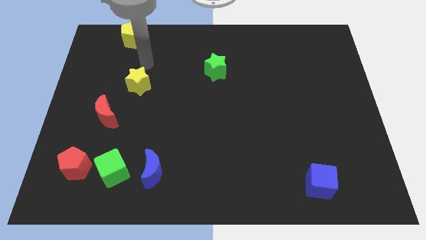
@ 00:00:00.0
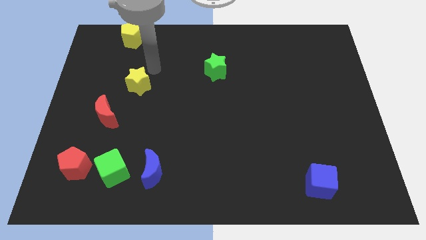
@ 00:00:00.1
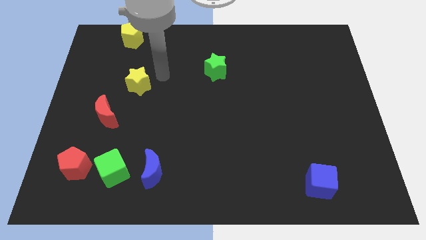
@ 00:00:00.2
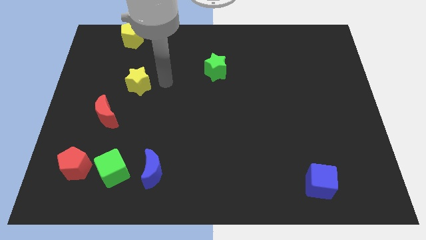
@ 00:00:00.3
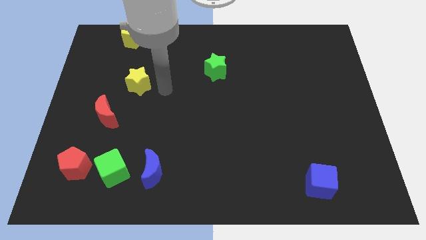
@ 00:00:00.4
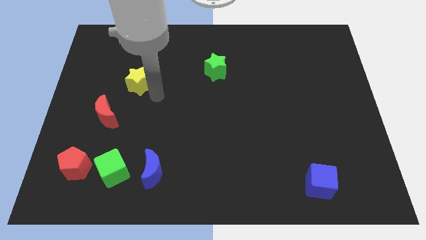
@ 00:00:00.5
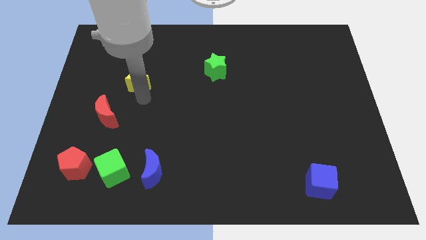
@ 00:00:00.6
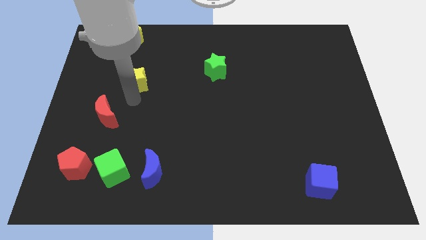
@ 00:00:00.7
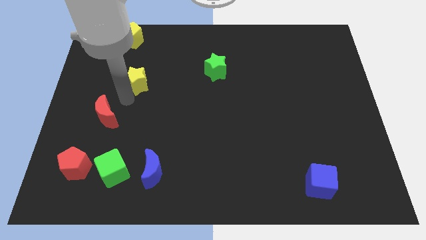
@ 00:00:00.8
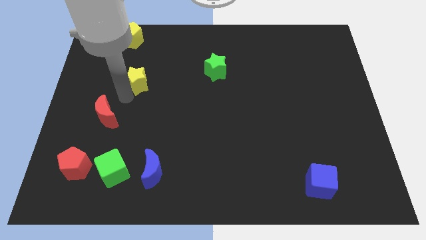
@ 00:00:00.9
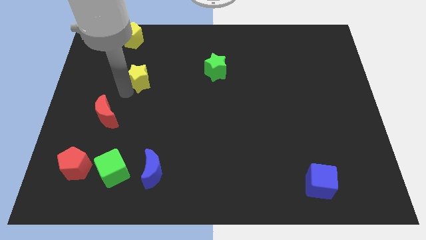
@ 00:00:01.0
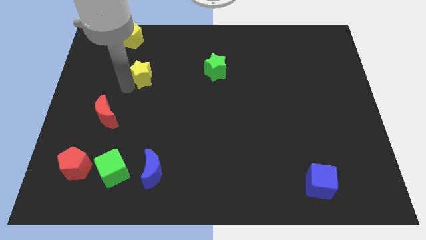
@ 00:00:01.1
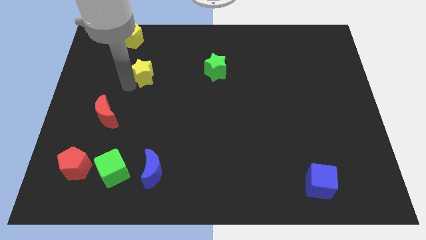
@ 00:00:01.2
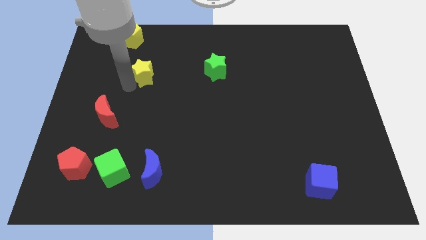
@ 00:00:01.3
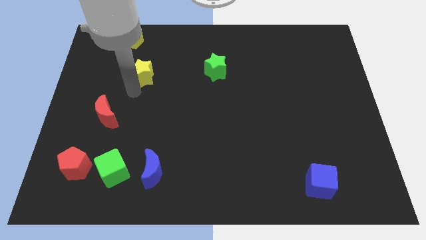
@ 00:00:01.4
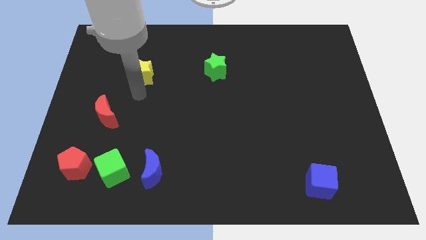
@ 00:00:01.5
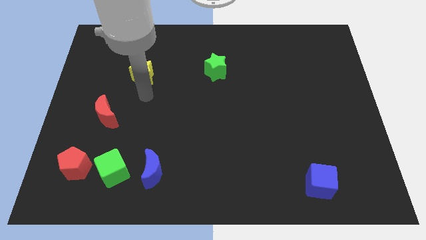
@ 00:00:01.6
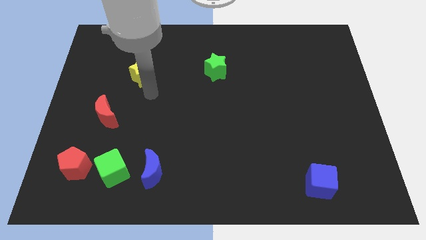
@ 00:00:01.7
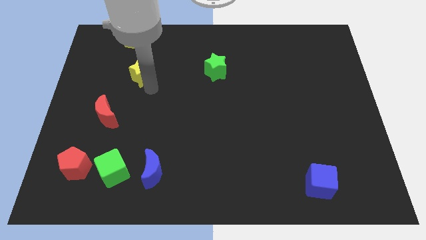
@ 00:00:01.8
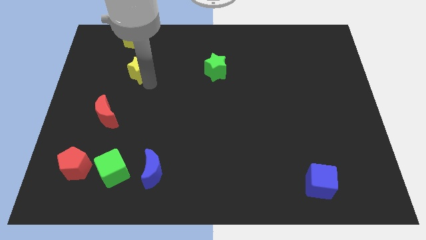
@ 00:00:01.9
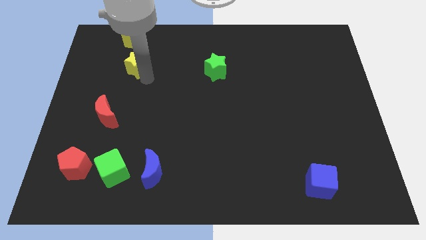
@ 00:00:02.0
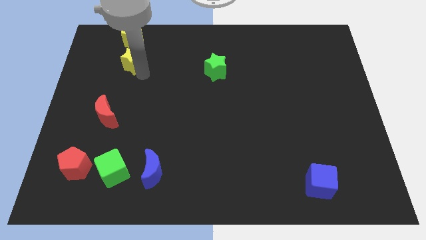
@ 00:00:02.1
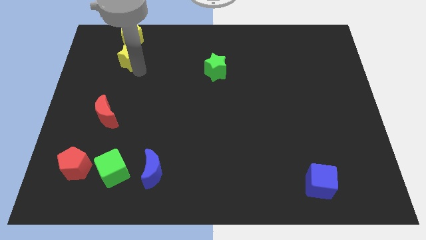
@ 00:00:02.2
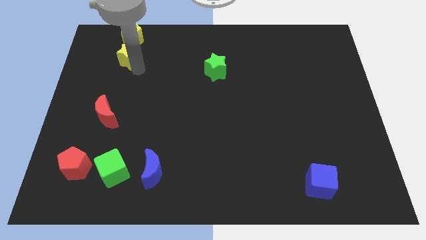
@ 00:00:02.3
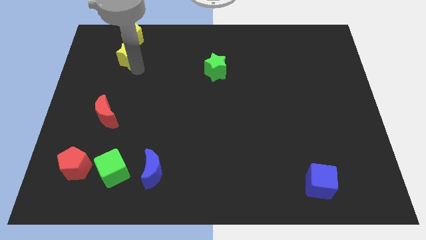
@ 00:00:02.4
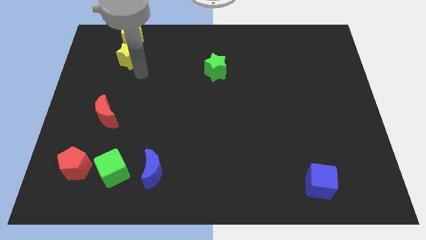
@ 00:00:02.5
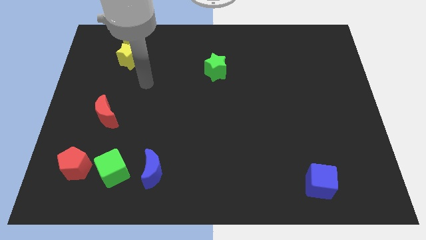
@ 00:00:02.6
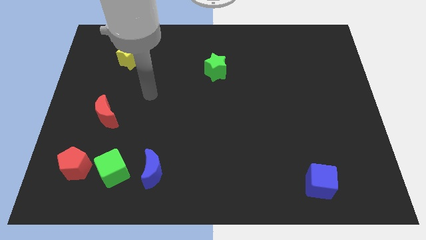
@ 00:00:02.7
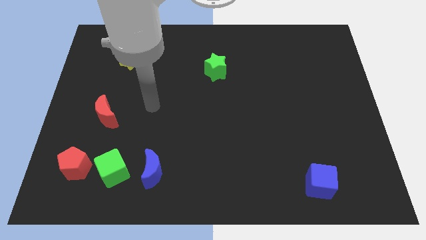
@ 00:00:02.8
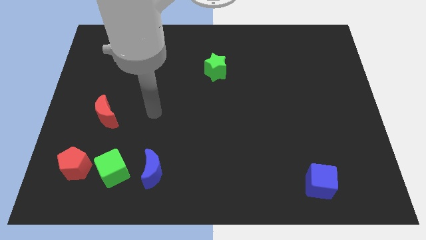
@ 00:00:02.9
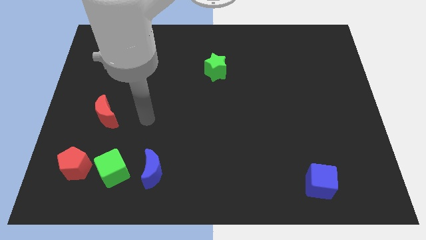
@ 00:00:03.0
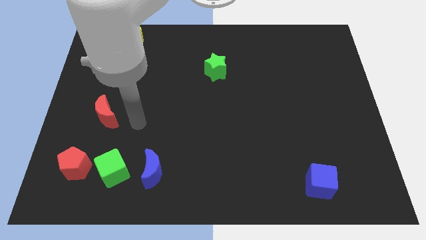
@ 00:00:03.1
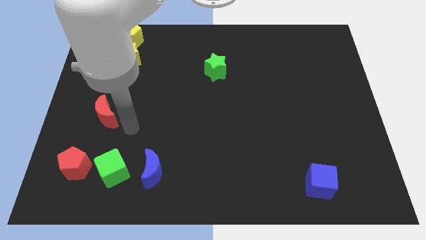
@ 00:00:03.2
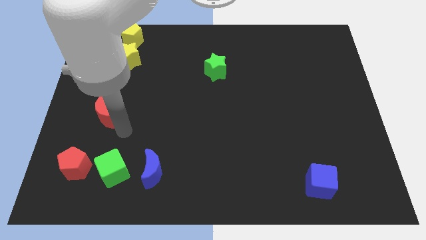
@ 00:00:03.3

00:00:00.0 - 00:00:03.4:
move yellow star below the yellow pentagon

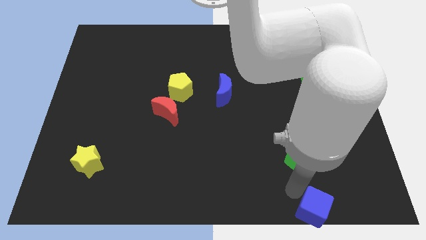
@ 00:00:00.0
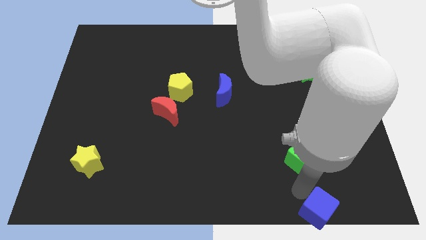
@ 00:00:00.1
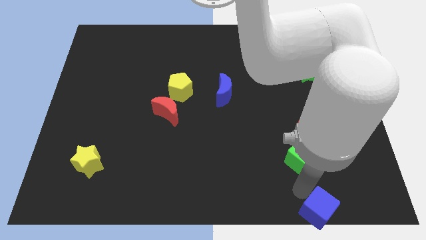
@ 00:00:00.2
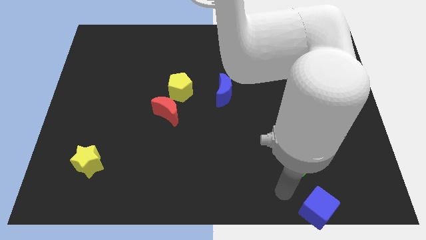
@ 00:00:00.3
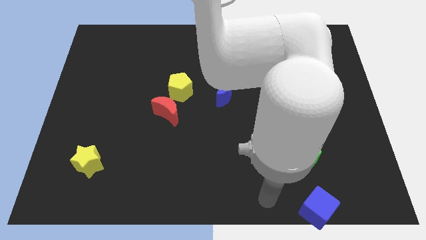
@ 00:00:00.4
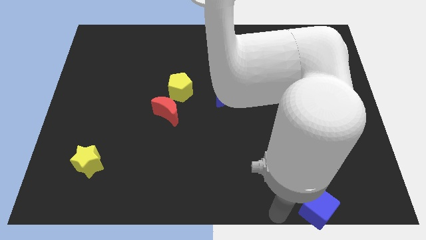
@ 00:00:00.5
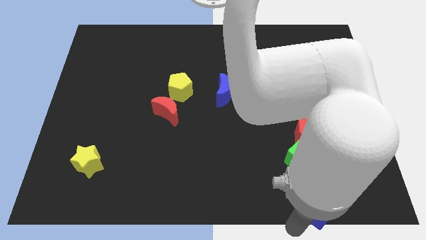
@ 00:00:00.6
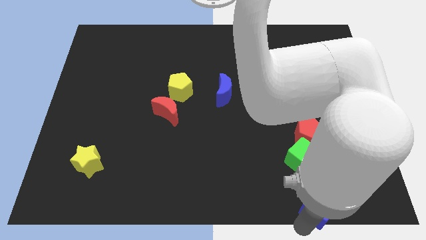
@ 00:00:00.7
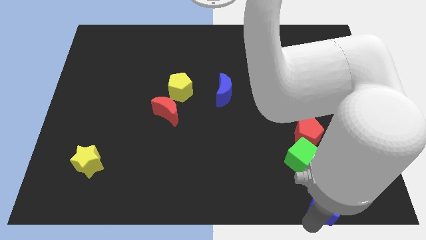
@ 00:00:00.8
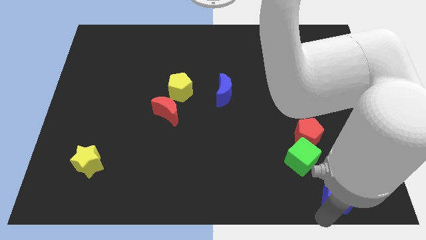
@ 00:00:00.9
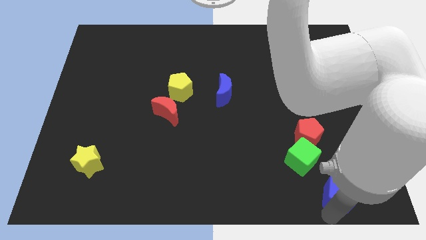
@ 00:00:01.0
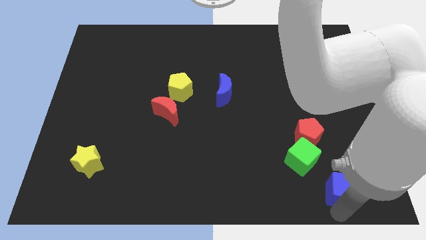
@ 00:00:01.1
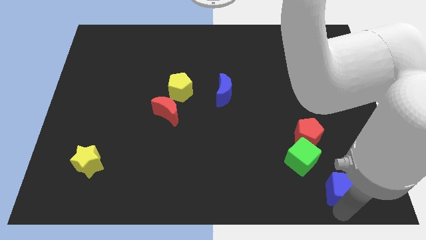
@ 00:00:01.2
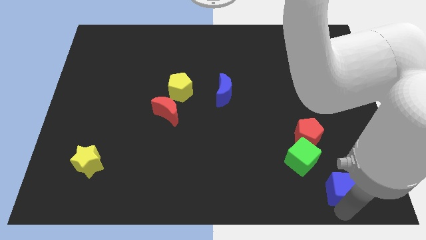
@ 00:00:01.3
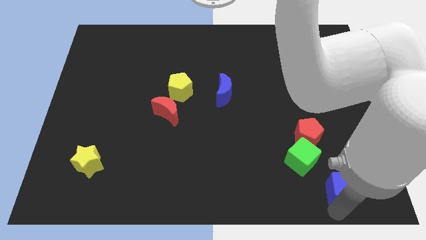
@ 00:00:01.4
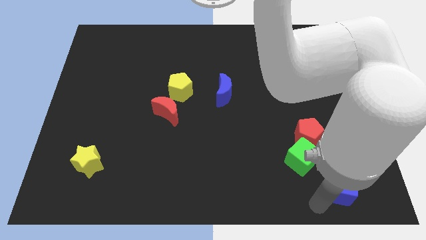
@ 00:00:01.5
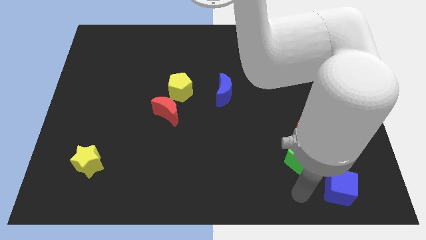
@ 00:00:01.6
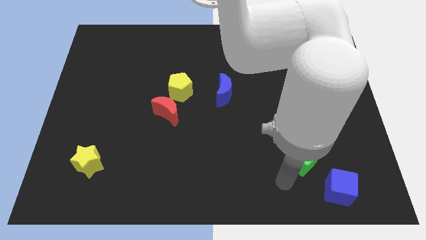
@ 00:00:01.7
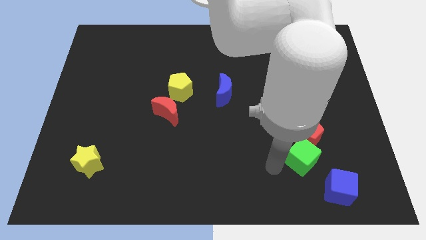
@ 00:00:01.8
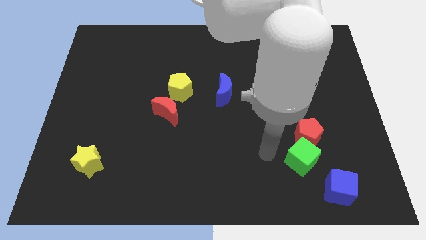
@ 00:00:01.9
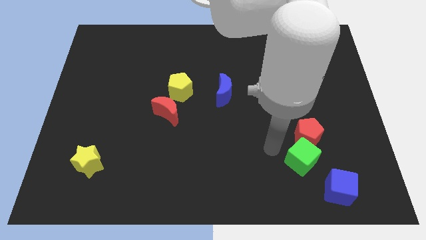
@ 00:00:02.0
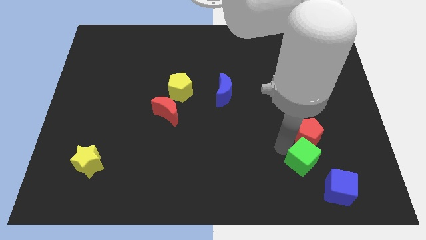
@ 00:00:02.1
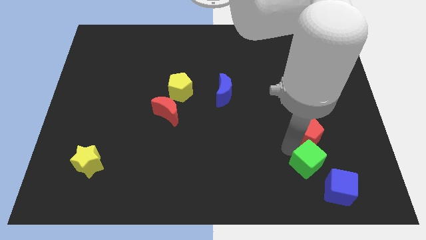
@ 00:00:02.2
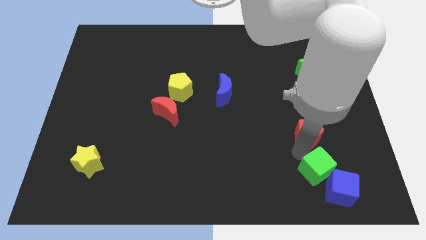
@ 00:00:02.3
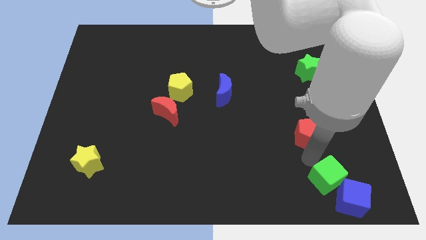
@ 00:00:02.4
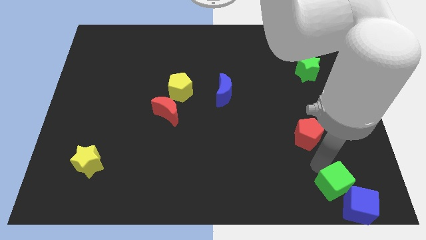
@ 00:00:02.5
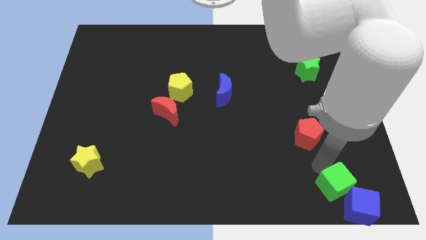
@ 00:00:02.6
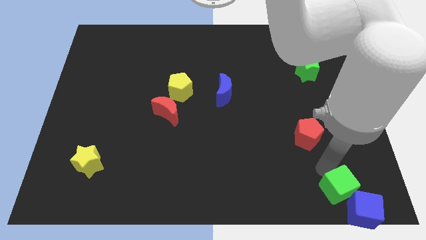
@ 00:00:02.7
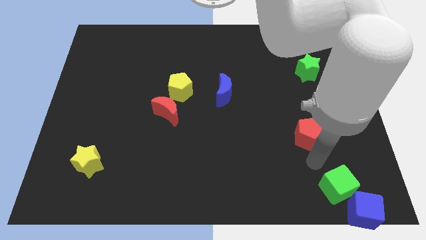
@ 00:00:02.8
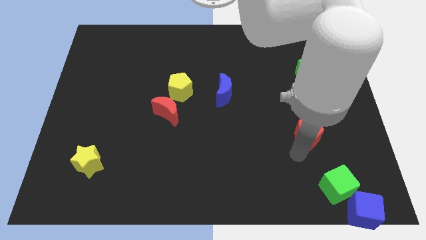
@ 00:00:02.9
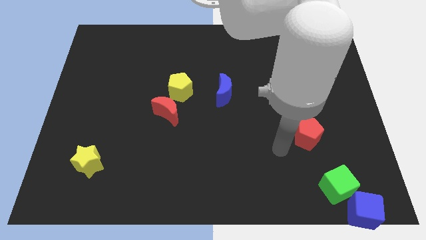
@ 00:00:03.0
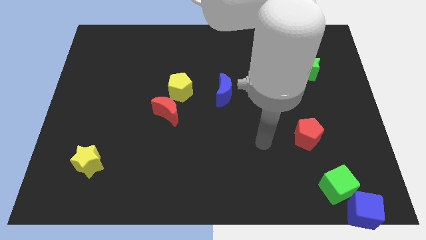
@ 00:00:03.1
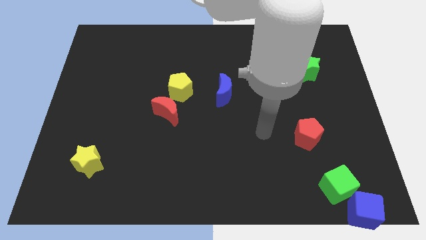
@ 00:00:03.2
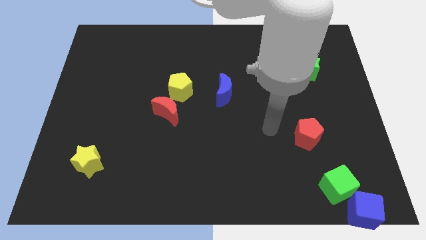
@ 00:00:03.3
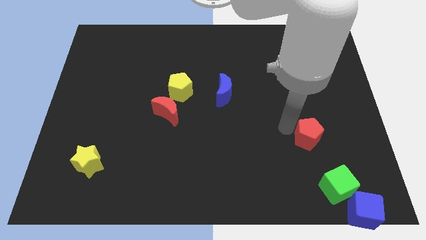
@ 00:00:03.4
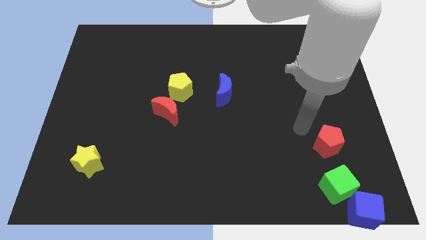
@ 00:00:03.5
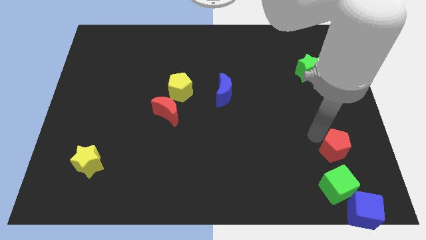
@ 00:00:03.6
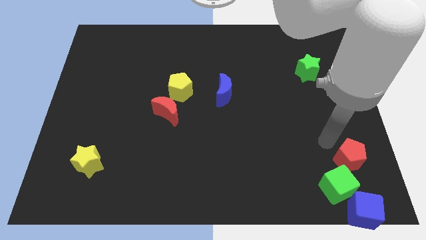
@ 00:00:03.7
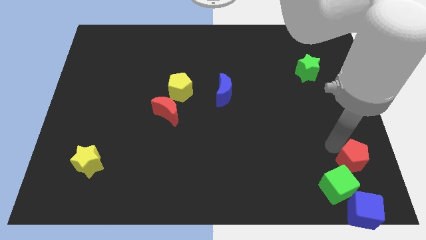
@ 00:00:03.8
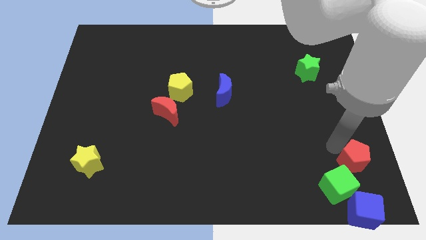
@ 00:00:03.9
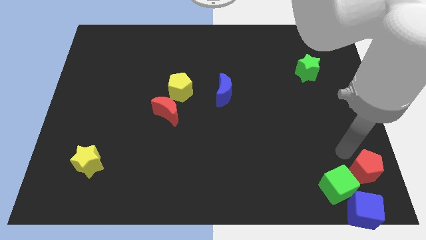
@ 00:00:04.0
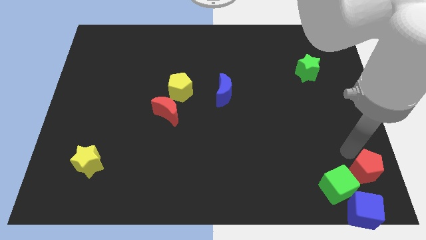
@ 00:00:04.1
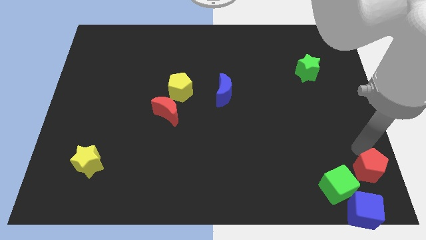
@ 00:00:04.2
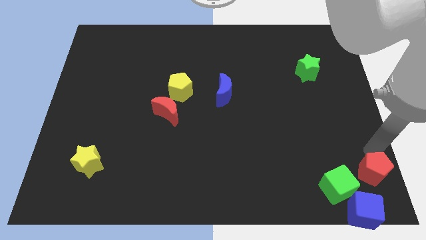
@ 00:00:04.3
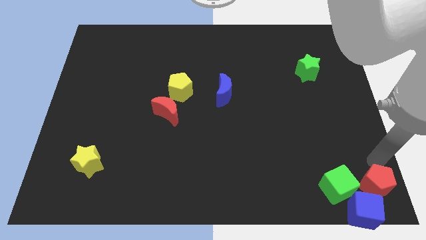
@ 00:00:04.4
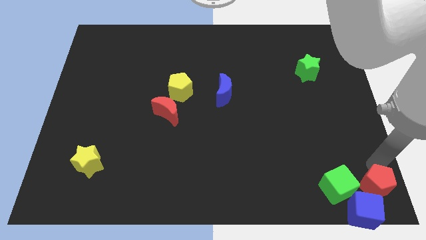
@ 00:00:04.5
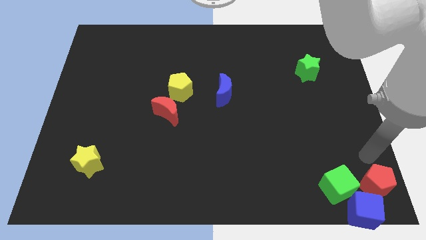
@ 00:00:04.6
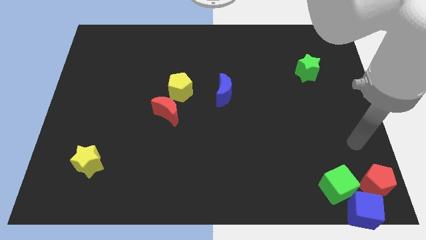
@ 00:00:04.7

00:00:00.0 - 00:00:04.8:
push the red blue and green blocks to the right bottom corner

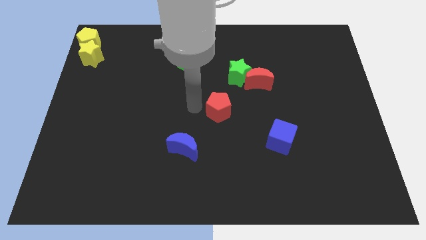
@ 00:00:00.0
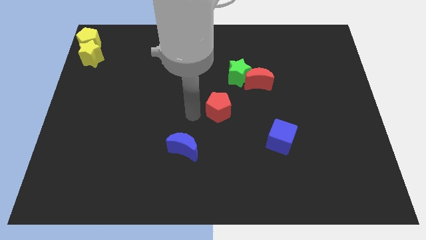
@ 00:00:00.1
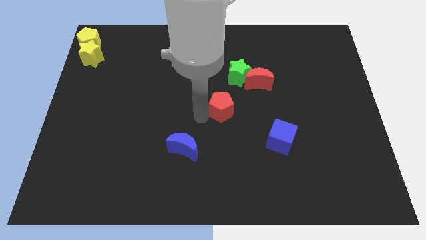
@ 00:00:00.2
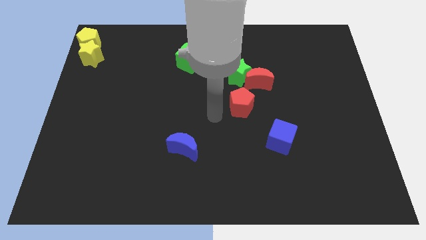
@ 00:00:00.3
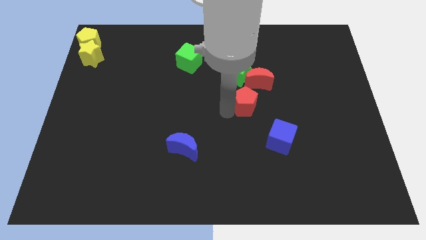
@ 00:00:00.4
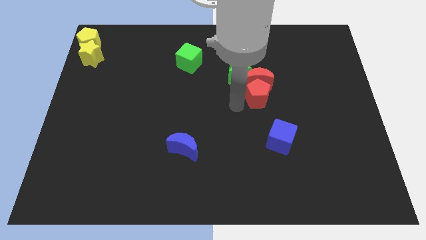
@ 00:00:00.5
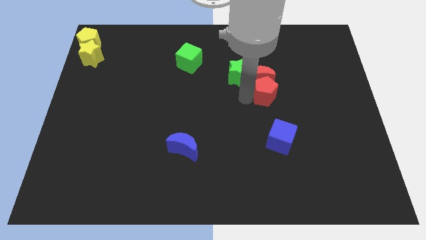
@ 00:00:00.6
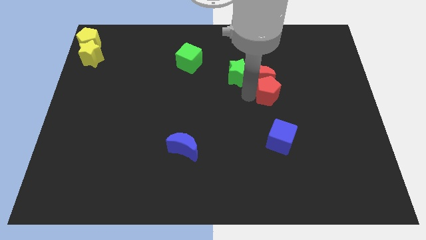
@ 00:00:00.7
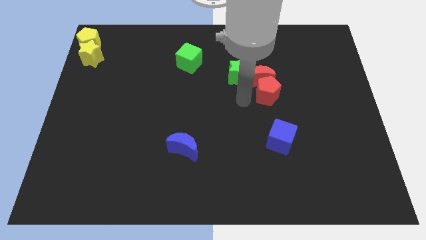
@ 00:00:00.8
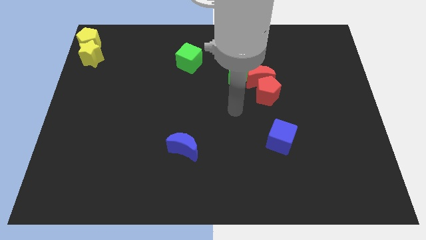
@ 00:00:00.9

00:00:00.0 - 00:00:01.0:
push the red pentagon into red moon
